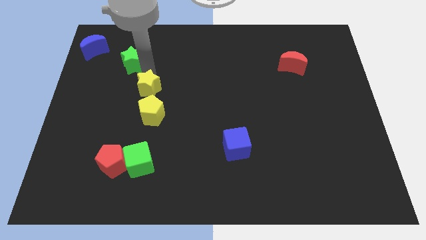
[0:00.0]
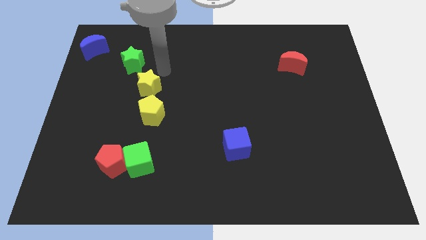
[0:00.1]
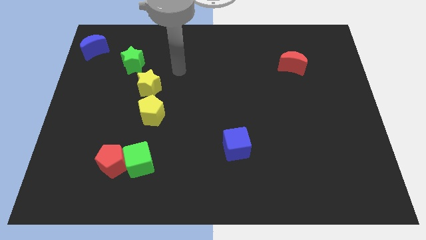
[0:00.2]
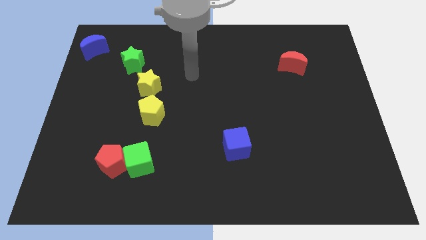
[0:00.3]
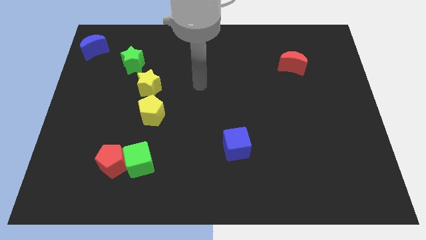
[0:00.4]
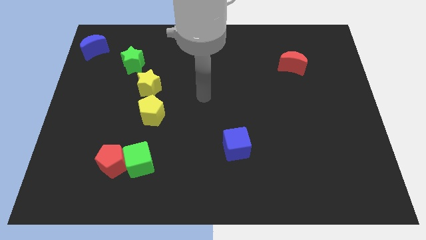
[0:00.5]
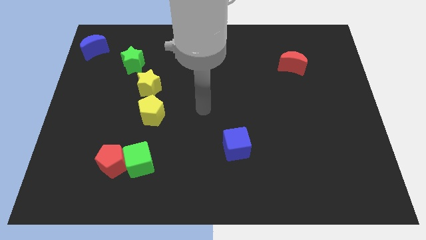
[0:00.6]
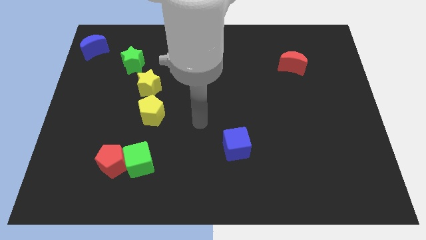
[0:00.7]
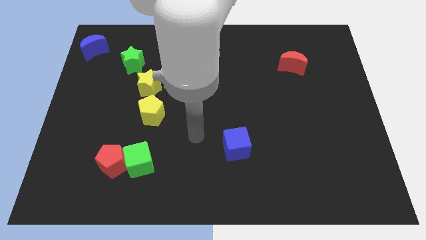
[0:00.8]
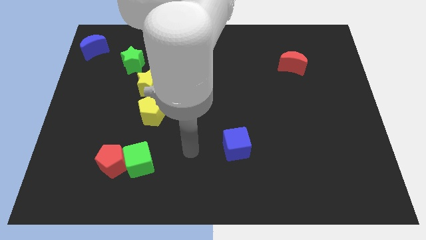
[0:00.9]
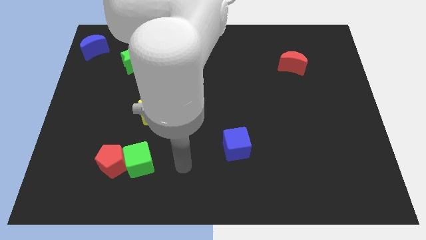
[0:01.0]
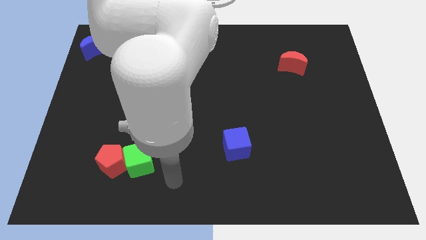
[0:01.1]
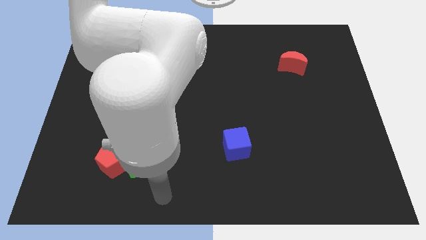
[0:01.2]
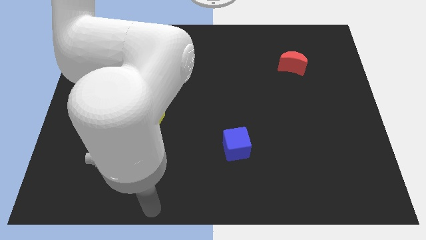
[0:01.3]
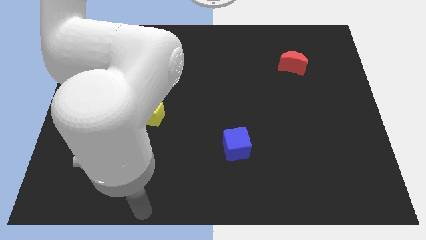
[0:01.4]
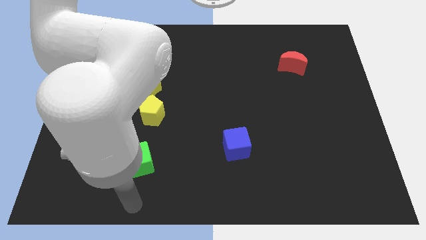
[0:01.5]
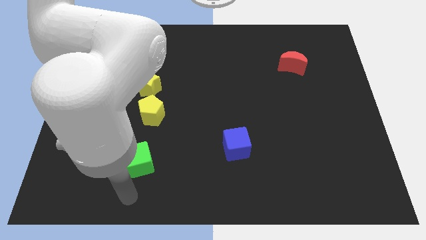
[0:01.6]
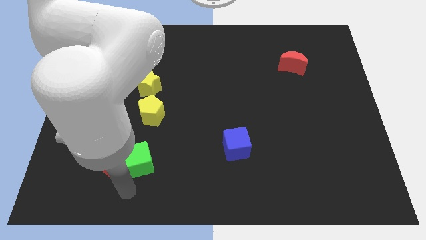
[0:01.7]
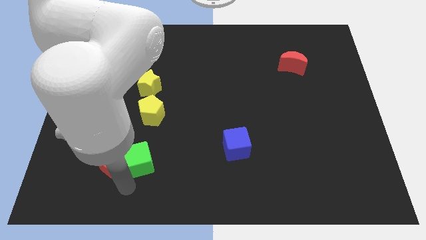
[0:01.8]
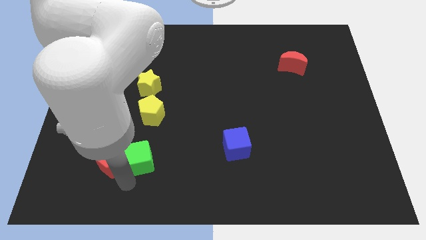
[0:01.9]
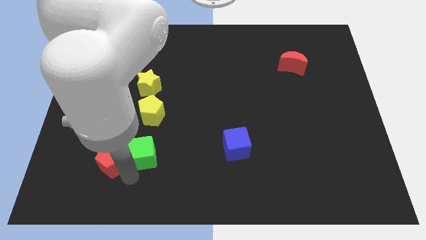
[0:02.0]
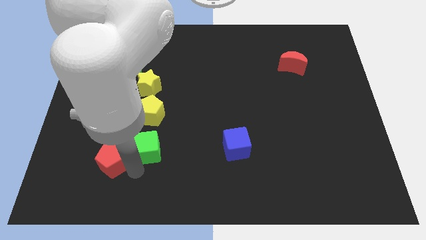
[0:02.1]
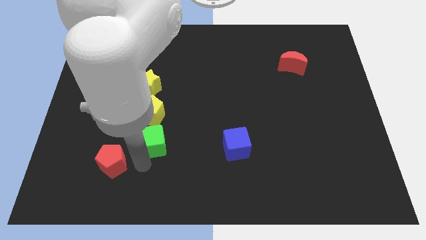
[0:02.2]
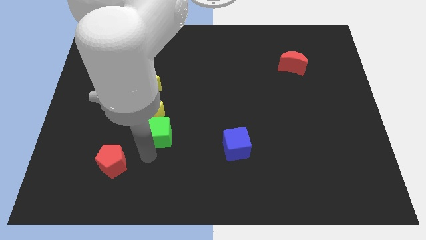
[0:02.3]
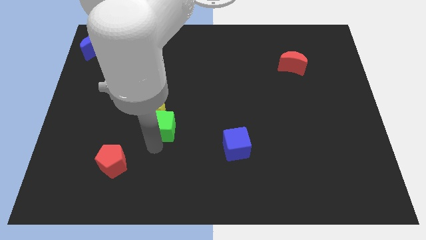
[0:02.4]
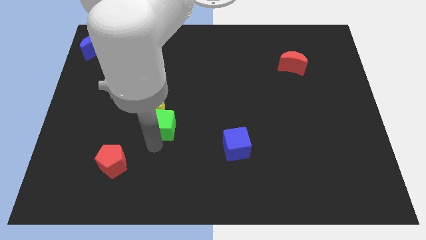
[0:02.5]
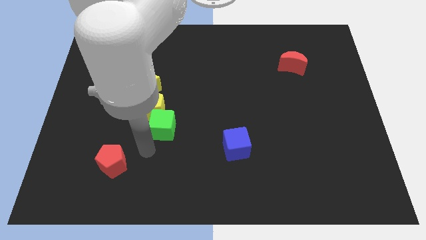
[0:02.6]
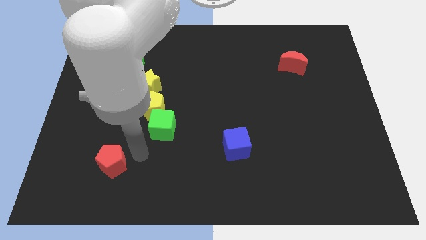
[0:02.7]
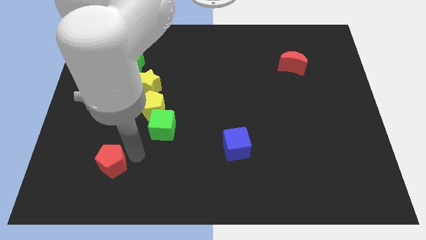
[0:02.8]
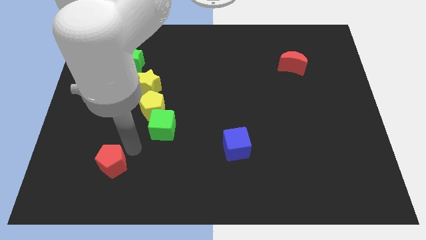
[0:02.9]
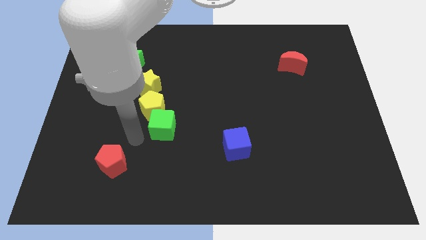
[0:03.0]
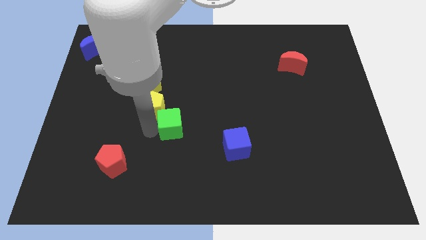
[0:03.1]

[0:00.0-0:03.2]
move the green cube to the bottom right corner of the yellow pentagon

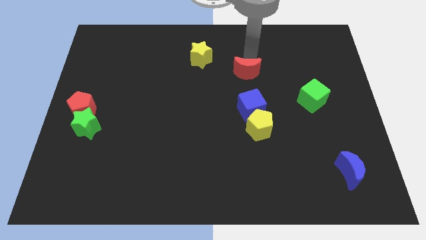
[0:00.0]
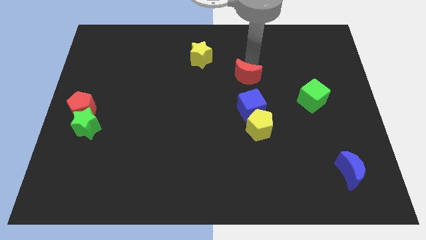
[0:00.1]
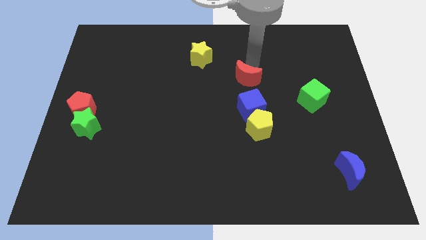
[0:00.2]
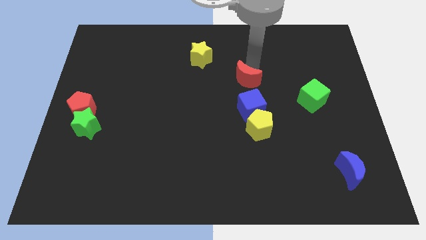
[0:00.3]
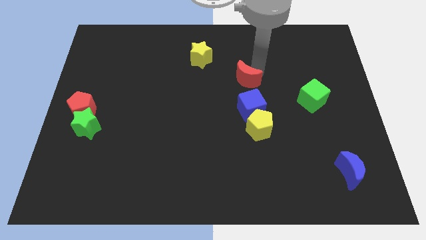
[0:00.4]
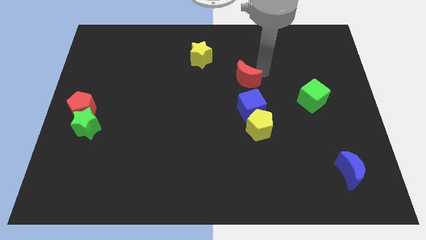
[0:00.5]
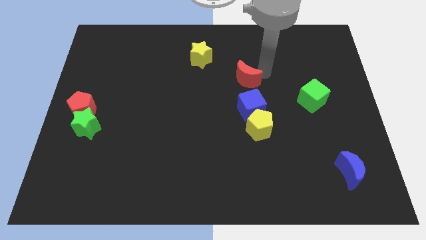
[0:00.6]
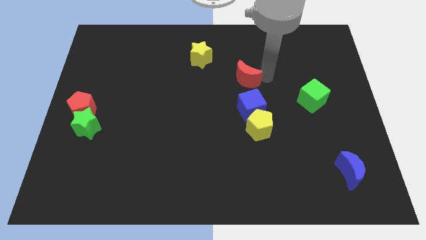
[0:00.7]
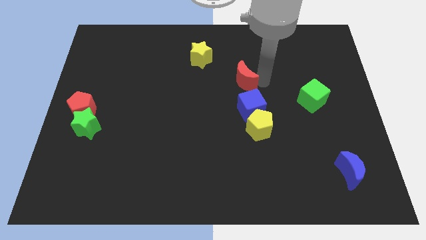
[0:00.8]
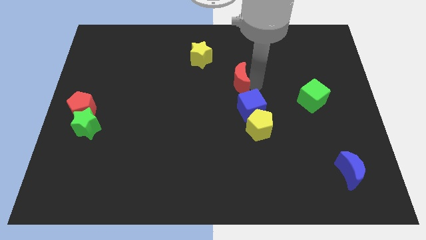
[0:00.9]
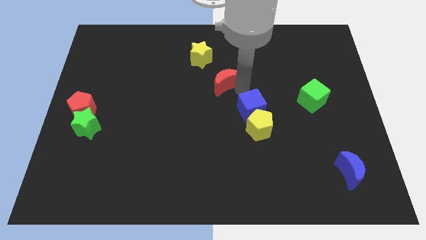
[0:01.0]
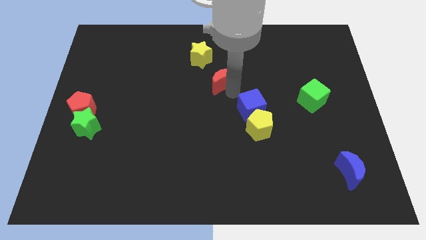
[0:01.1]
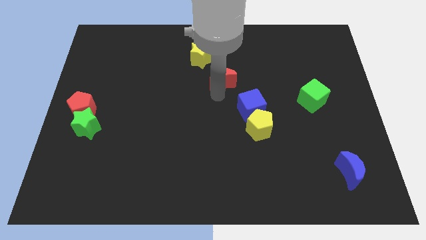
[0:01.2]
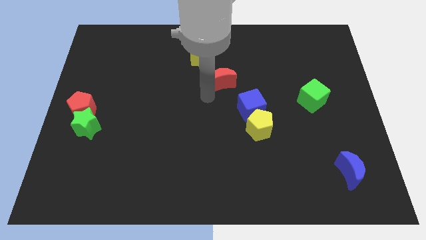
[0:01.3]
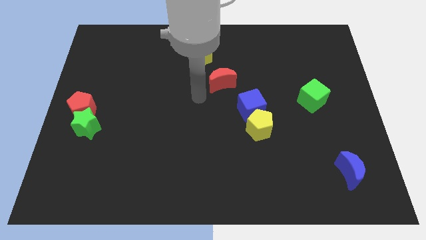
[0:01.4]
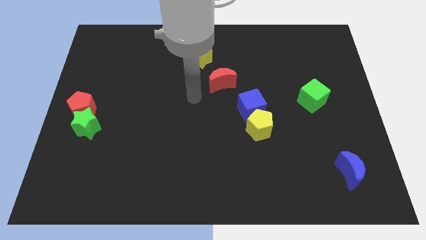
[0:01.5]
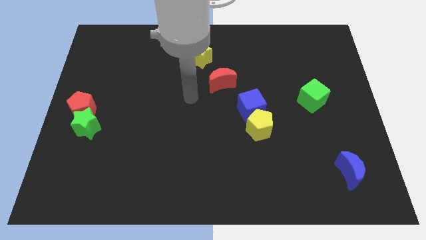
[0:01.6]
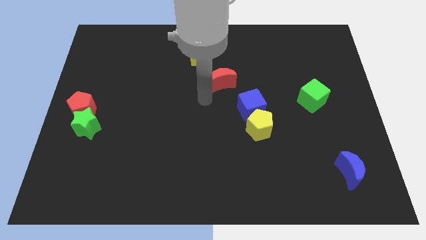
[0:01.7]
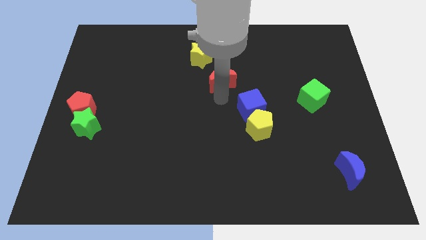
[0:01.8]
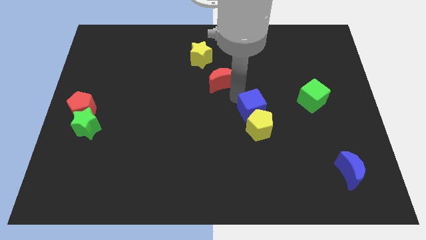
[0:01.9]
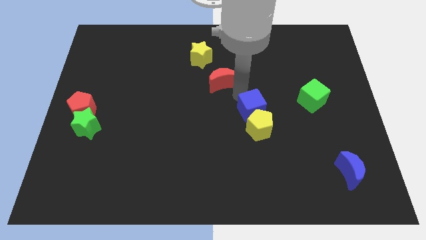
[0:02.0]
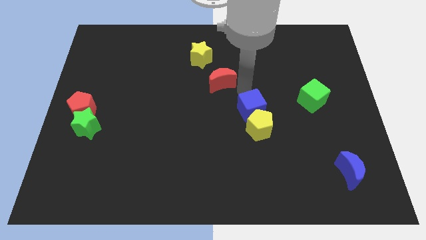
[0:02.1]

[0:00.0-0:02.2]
place the red moon between the yellow star and blue cube

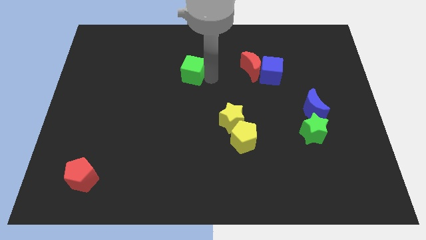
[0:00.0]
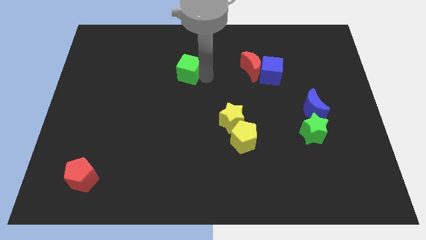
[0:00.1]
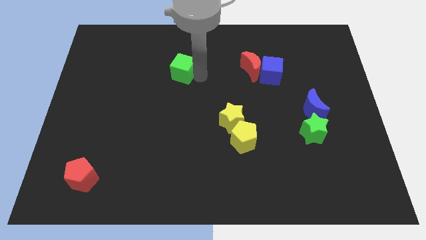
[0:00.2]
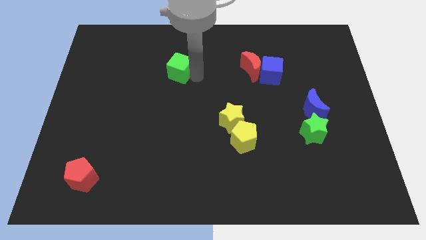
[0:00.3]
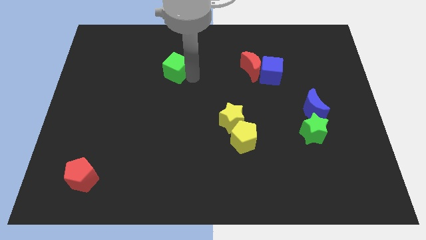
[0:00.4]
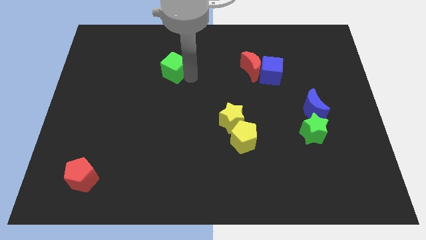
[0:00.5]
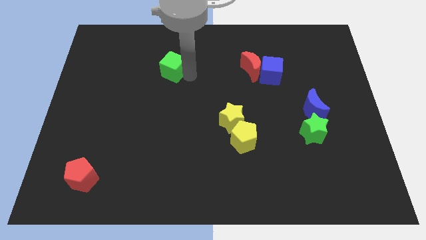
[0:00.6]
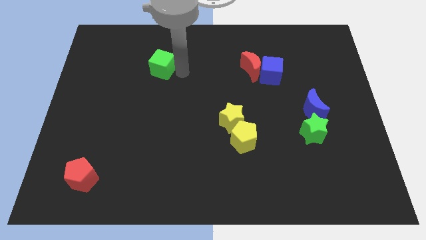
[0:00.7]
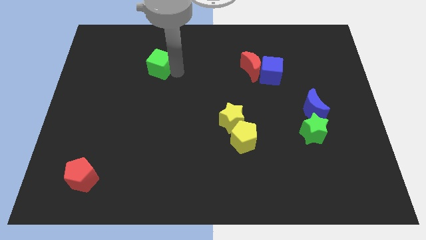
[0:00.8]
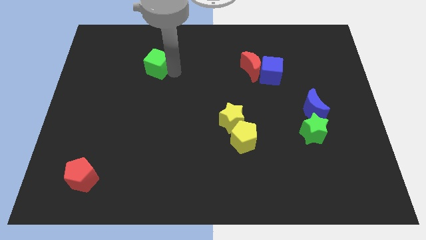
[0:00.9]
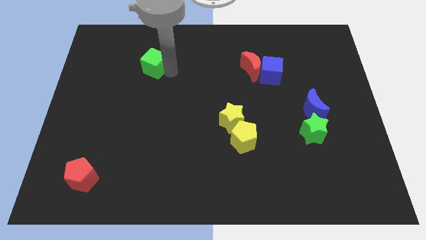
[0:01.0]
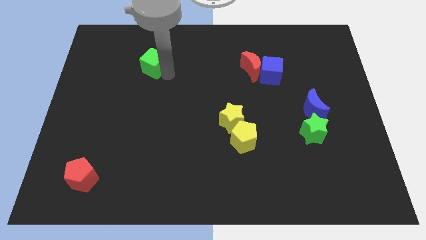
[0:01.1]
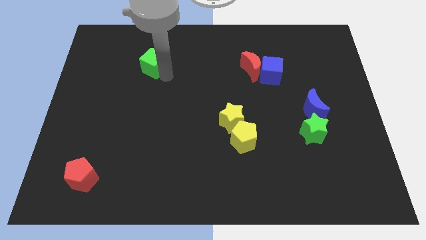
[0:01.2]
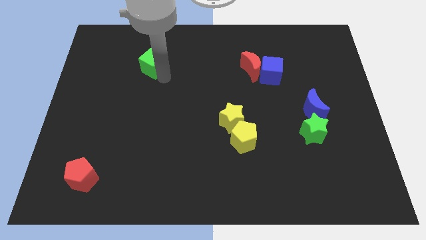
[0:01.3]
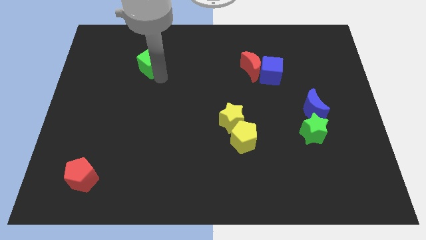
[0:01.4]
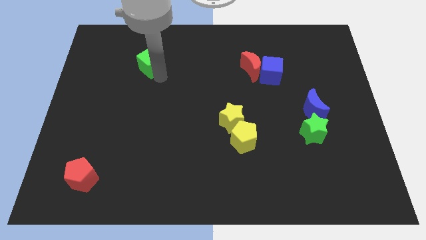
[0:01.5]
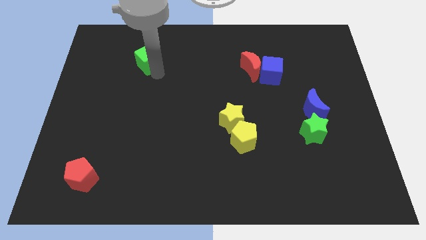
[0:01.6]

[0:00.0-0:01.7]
slide green cube to left

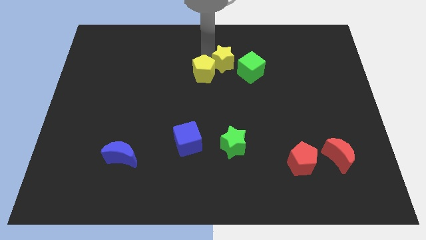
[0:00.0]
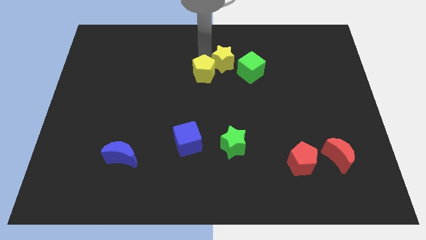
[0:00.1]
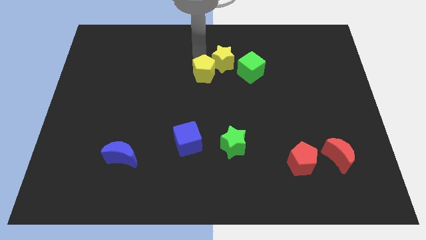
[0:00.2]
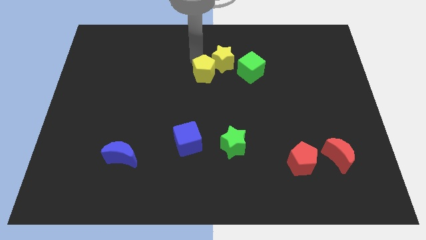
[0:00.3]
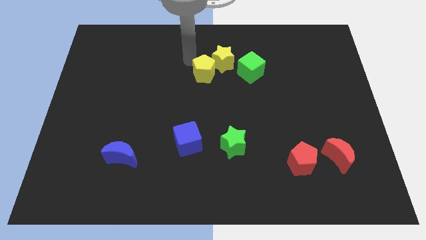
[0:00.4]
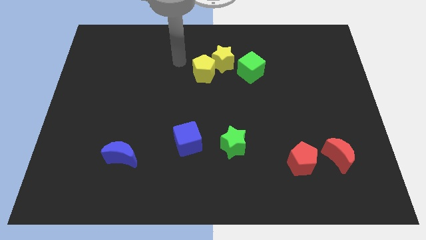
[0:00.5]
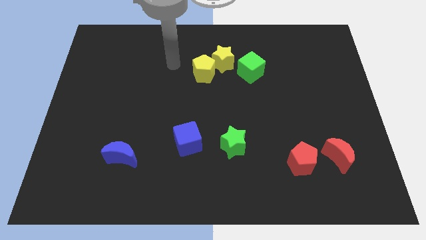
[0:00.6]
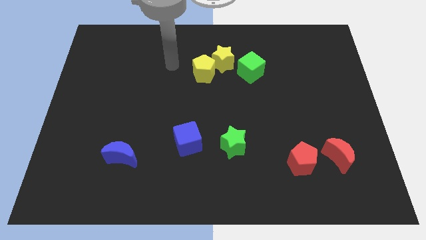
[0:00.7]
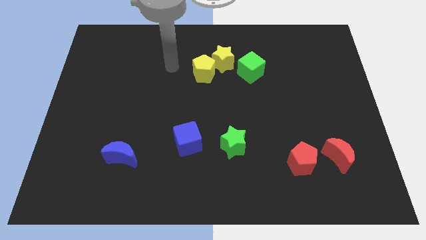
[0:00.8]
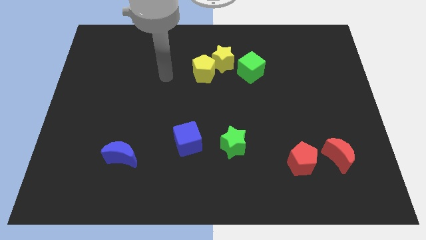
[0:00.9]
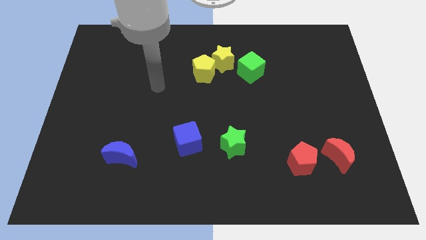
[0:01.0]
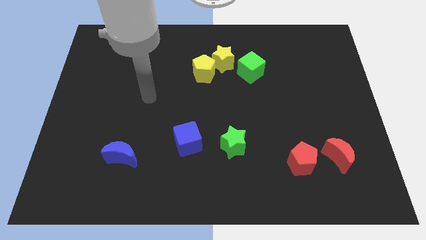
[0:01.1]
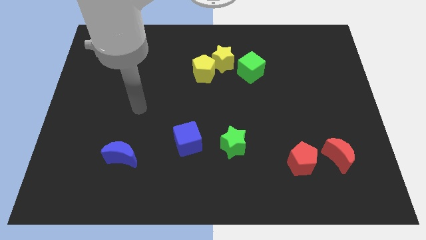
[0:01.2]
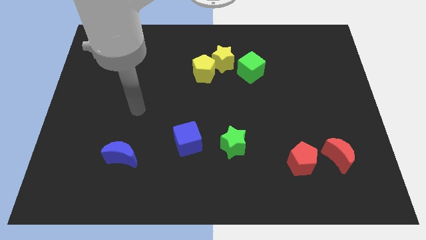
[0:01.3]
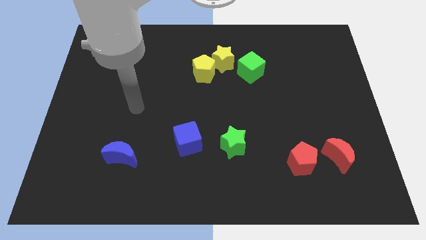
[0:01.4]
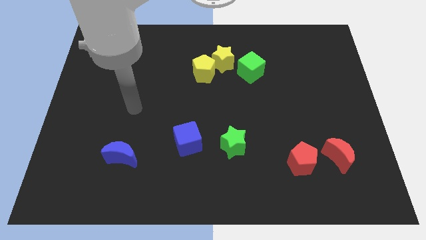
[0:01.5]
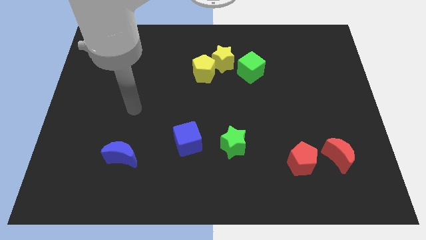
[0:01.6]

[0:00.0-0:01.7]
move your arm away from the yellow star

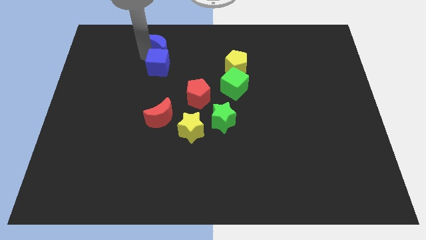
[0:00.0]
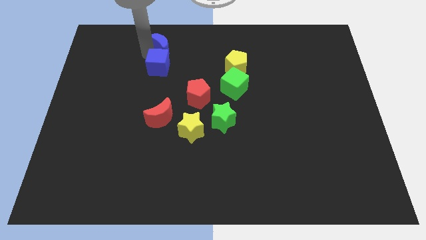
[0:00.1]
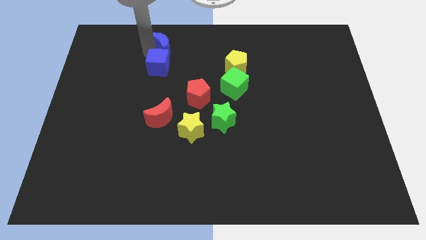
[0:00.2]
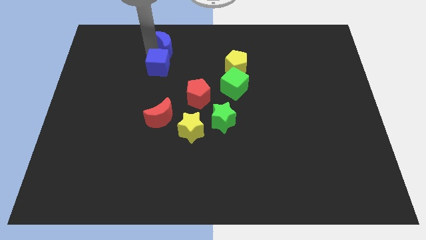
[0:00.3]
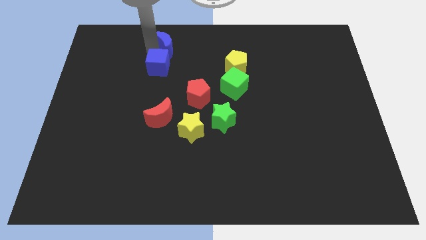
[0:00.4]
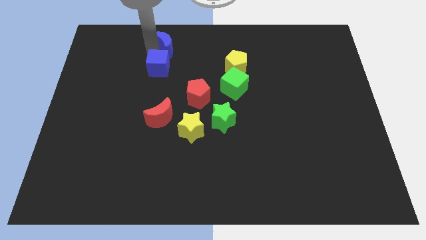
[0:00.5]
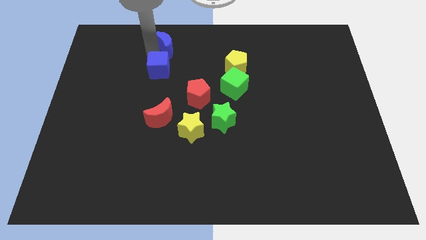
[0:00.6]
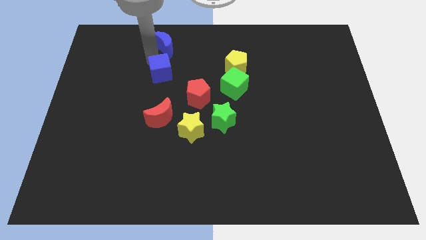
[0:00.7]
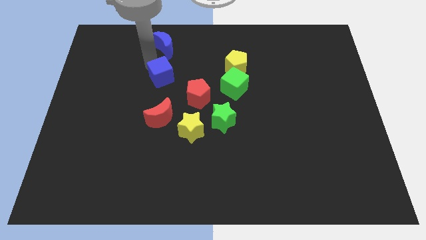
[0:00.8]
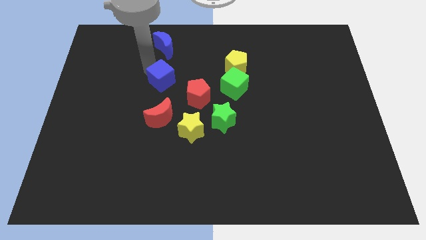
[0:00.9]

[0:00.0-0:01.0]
separate the blue moon and the blue cube
